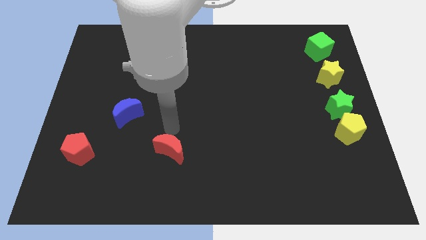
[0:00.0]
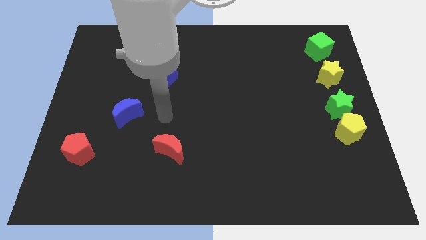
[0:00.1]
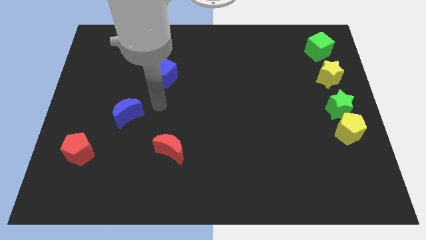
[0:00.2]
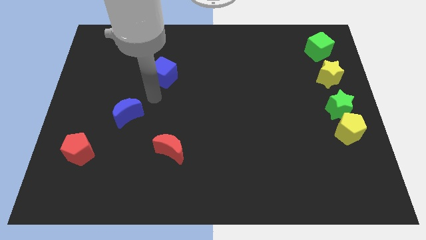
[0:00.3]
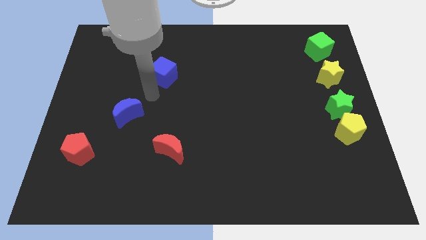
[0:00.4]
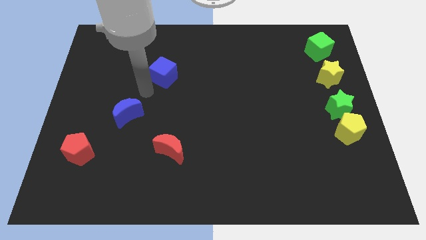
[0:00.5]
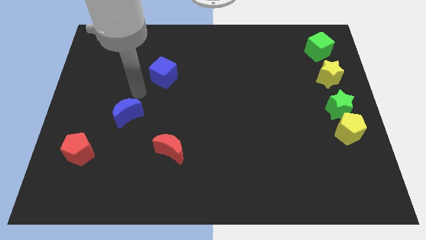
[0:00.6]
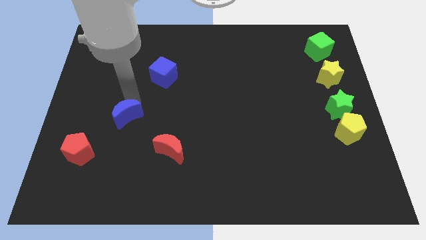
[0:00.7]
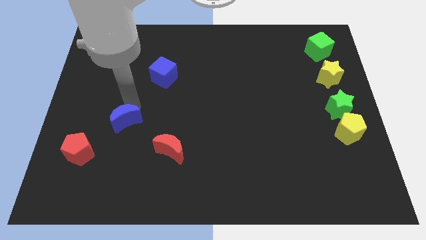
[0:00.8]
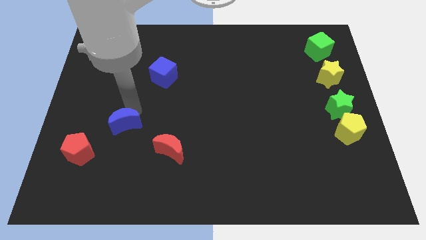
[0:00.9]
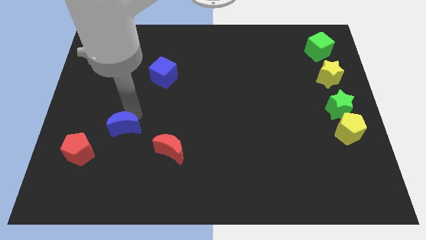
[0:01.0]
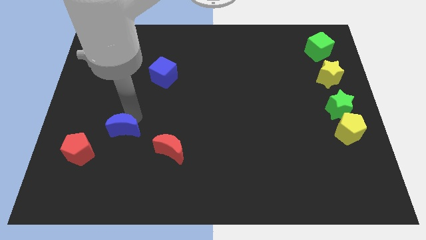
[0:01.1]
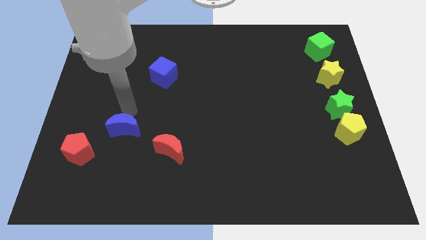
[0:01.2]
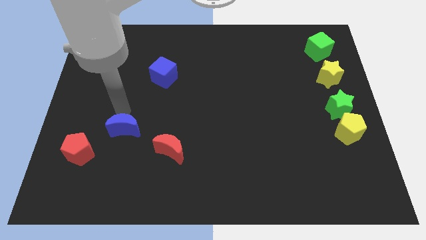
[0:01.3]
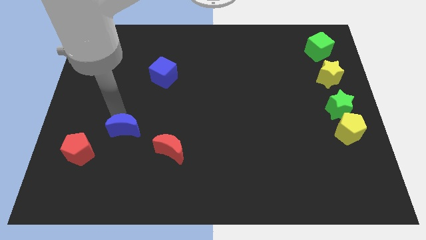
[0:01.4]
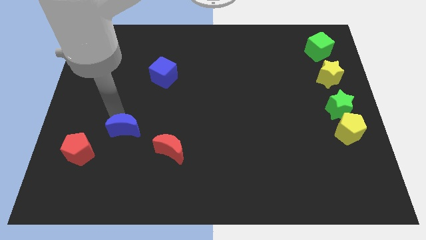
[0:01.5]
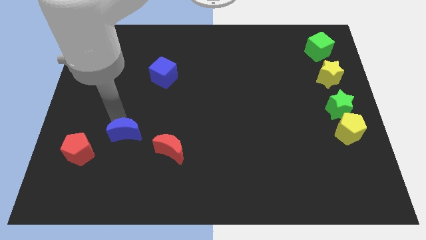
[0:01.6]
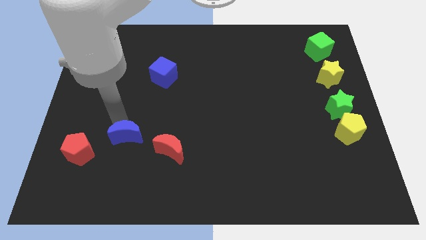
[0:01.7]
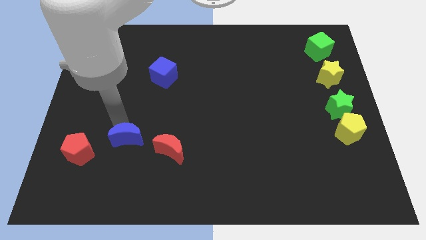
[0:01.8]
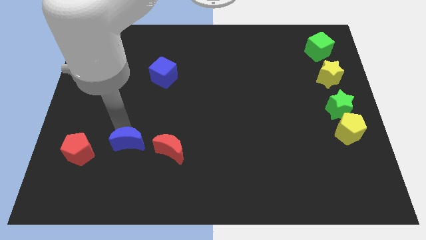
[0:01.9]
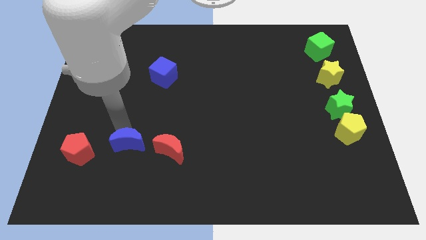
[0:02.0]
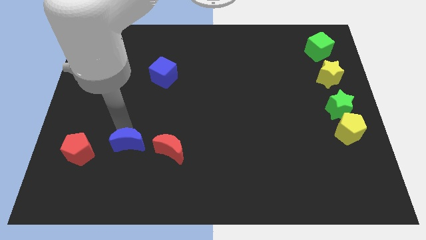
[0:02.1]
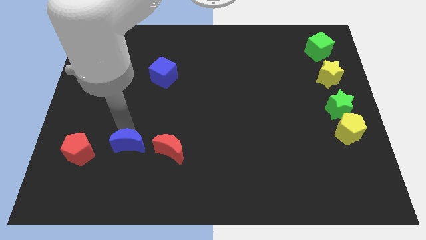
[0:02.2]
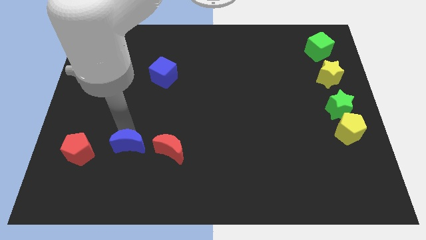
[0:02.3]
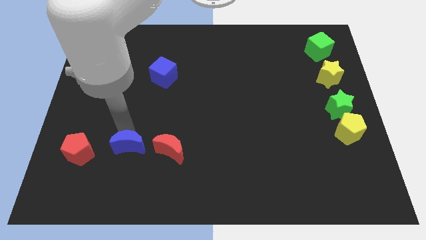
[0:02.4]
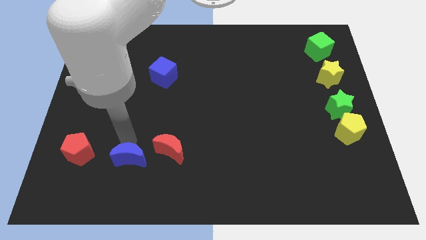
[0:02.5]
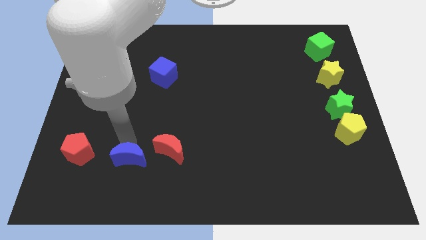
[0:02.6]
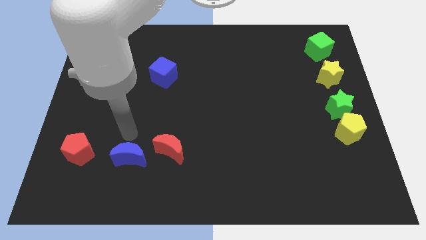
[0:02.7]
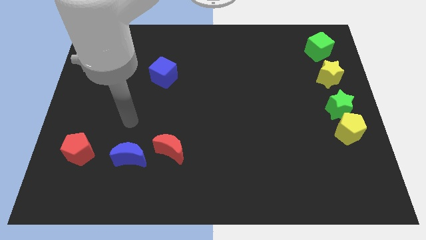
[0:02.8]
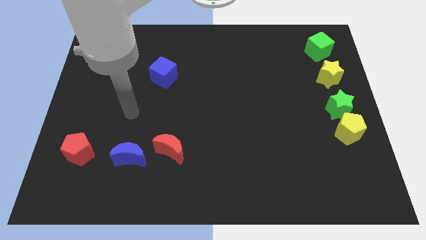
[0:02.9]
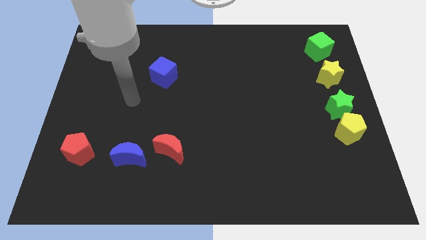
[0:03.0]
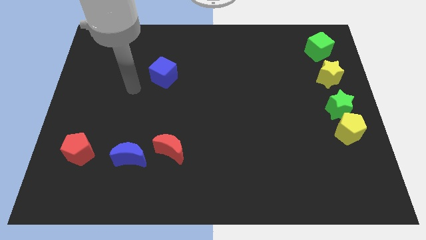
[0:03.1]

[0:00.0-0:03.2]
place blue moon between red moon and red pentagon

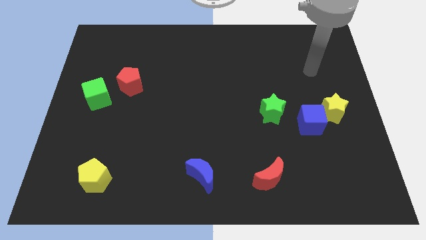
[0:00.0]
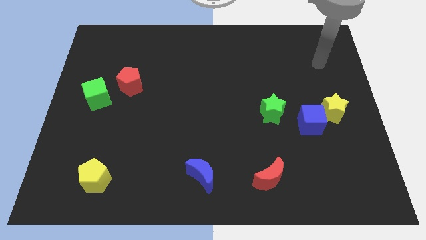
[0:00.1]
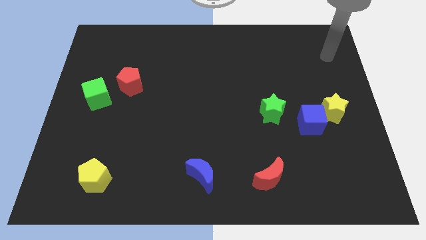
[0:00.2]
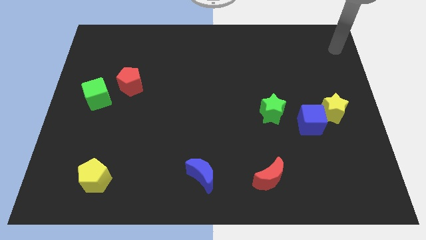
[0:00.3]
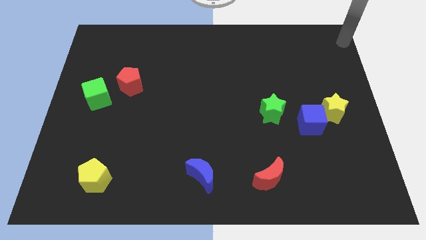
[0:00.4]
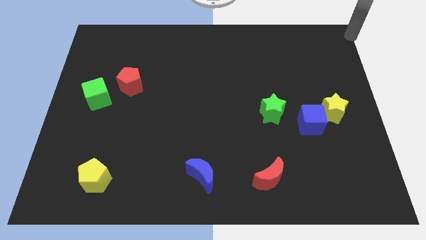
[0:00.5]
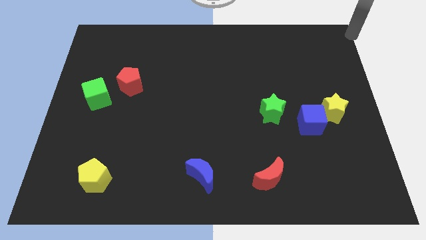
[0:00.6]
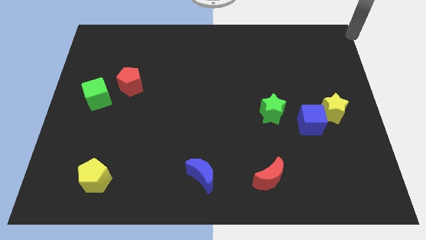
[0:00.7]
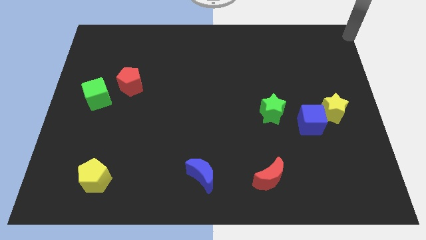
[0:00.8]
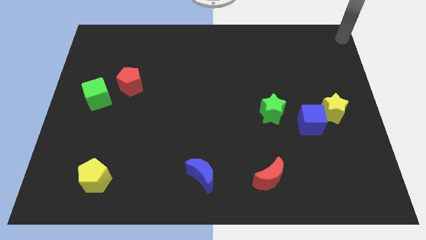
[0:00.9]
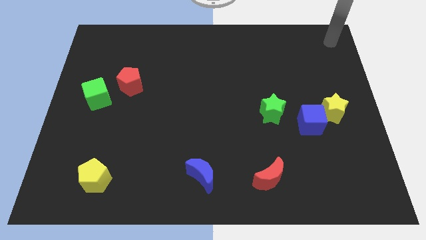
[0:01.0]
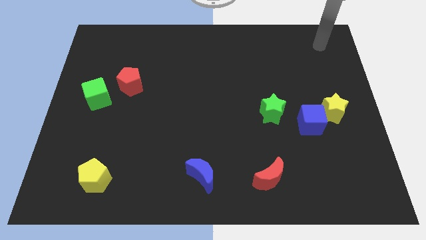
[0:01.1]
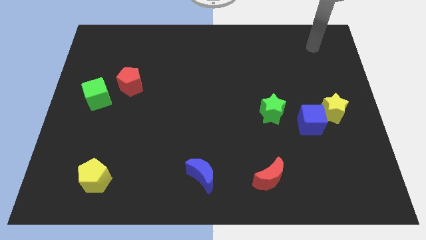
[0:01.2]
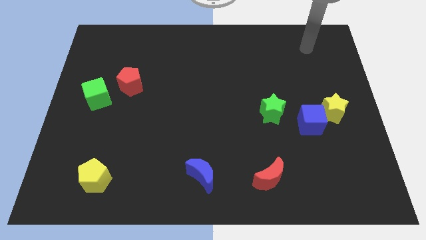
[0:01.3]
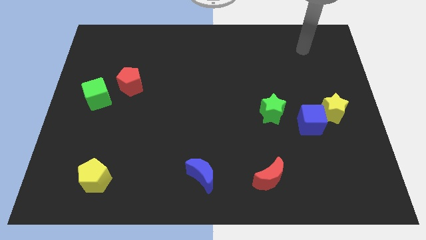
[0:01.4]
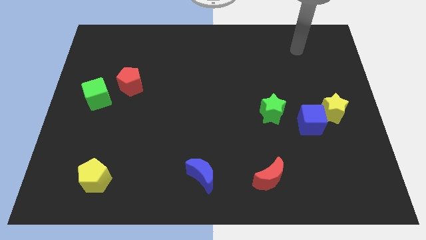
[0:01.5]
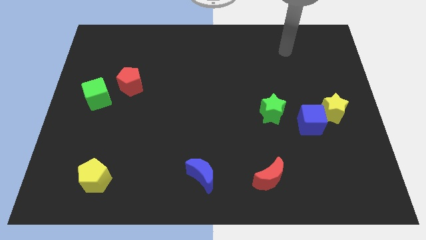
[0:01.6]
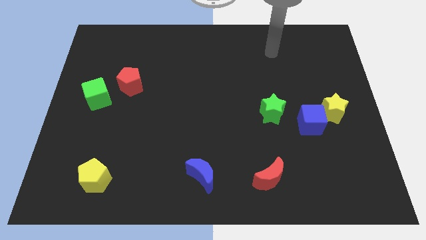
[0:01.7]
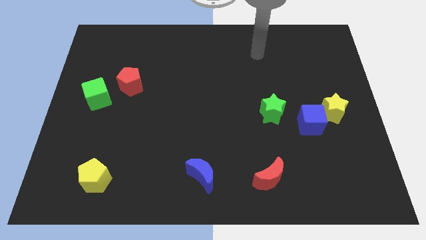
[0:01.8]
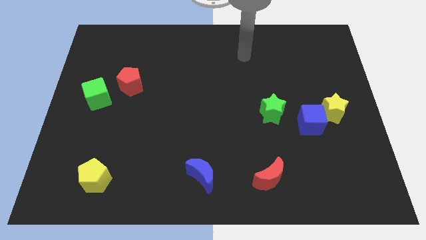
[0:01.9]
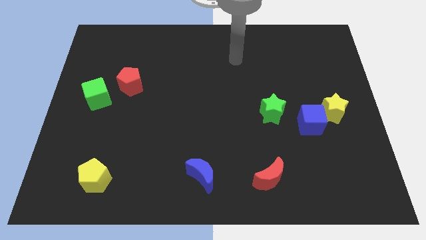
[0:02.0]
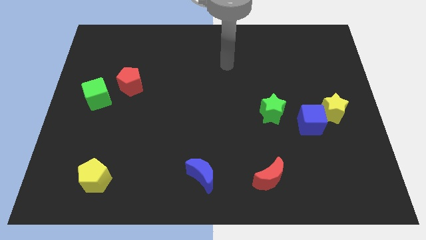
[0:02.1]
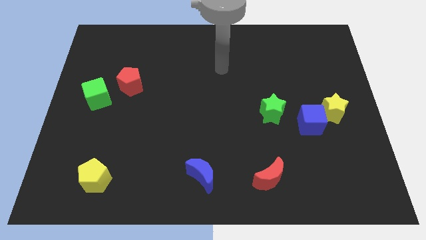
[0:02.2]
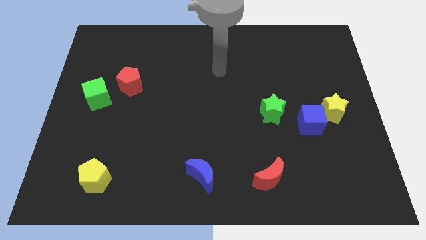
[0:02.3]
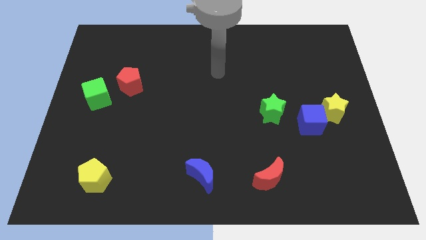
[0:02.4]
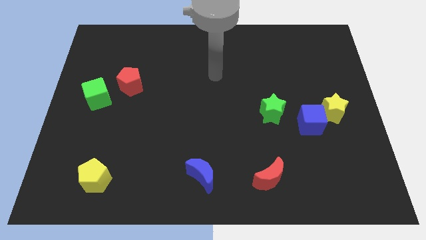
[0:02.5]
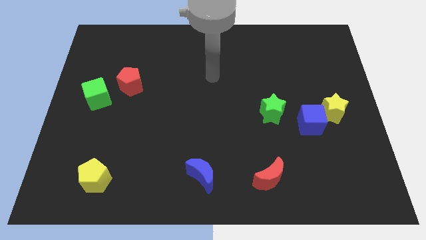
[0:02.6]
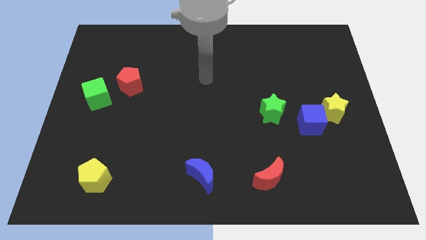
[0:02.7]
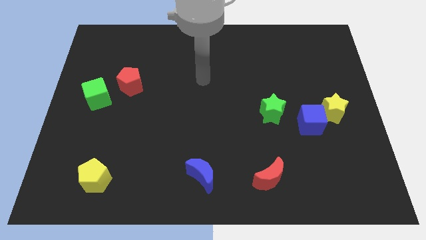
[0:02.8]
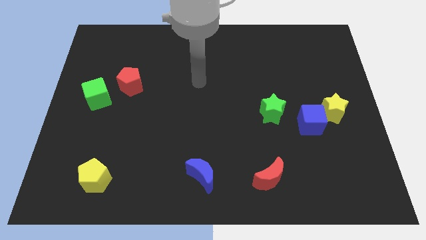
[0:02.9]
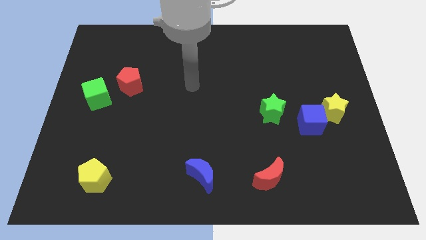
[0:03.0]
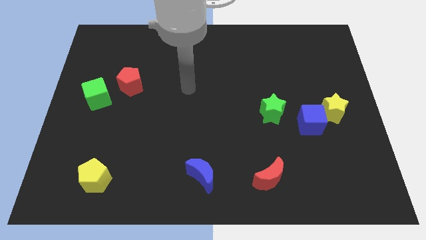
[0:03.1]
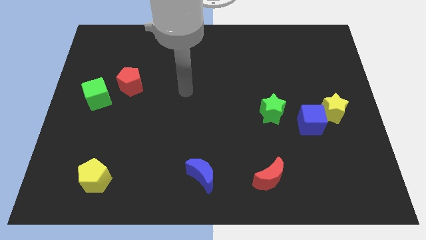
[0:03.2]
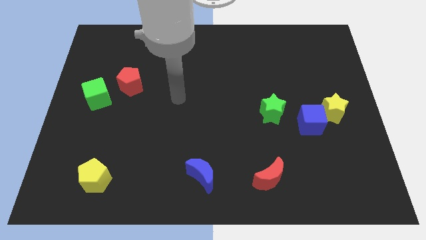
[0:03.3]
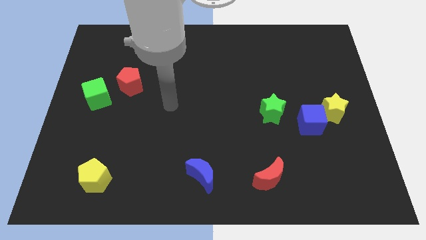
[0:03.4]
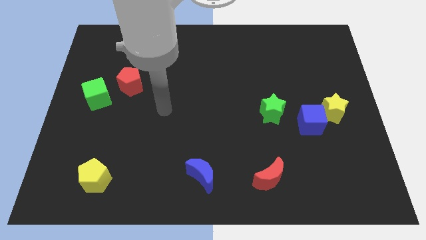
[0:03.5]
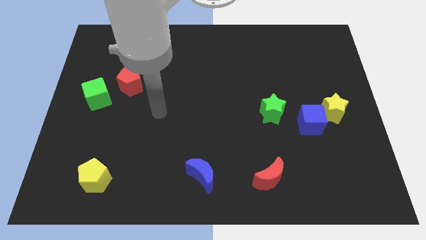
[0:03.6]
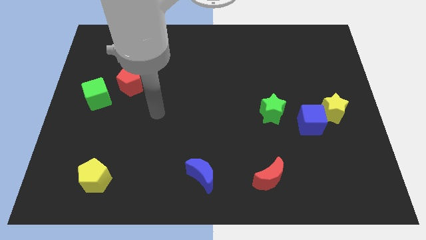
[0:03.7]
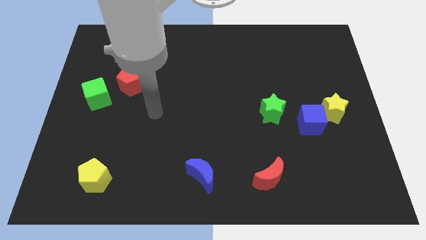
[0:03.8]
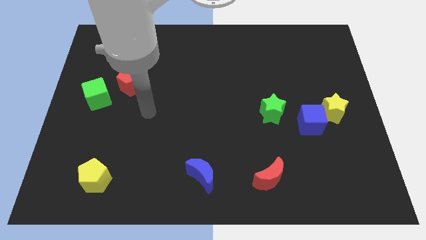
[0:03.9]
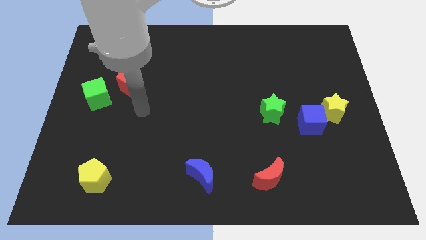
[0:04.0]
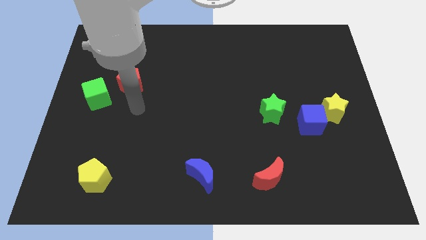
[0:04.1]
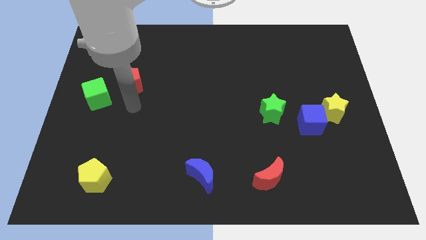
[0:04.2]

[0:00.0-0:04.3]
point your arm at the bottom of the red pentagon

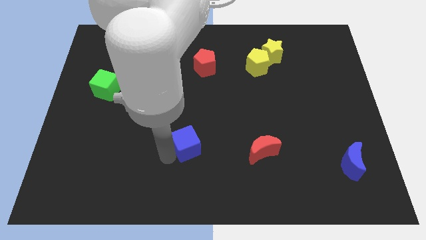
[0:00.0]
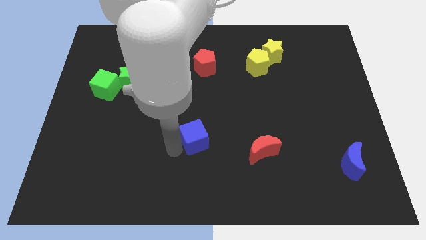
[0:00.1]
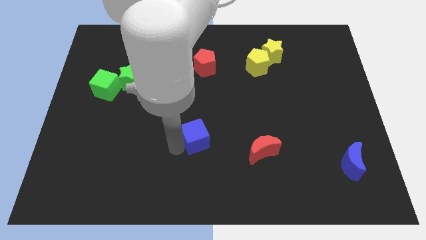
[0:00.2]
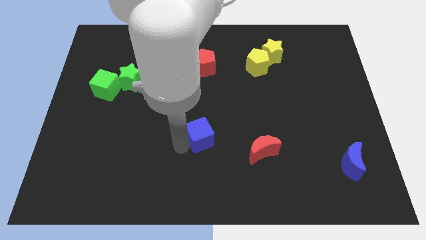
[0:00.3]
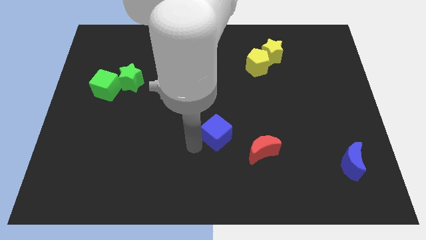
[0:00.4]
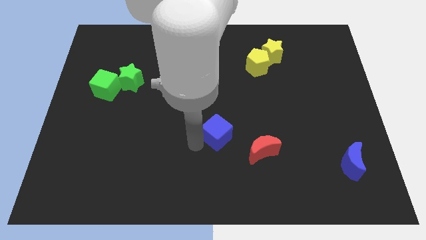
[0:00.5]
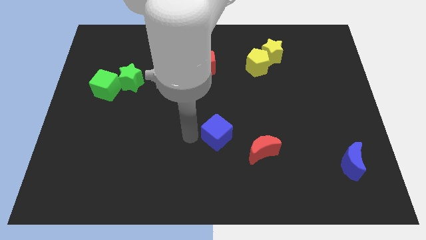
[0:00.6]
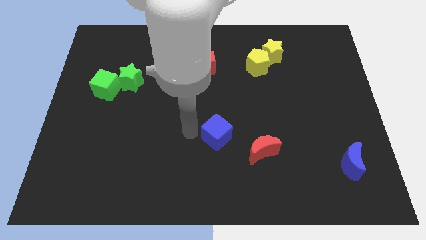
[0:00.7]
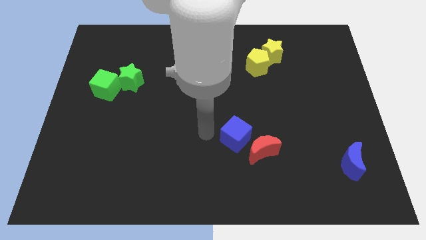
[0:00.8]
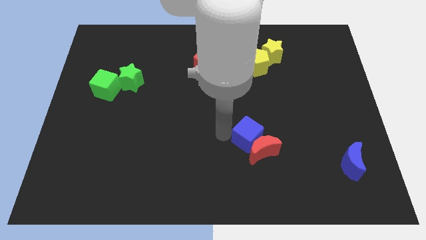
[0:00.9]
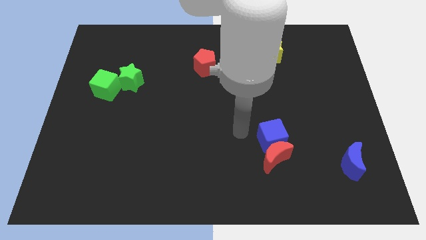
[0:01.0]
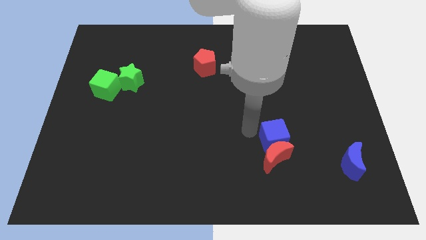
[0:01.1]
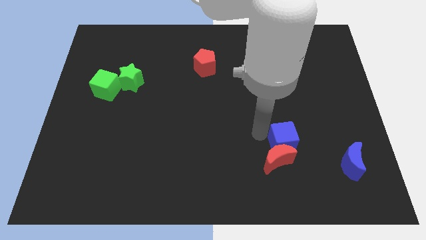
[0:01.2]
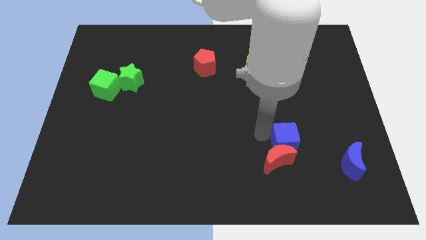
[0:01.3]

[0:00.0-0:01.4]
place blue cube to the top of red moon
